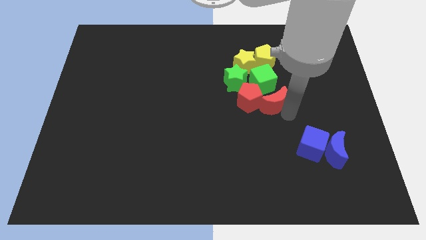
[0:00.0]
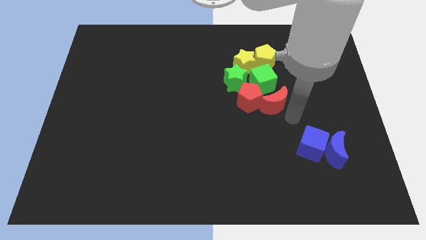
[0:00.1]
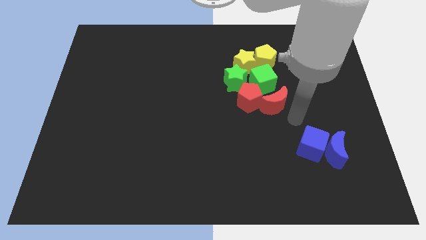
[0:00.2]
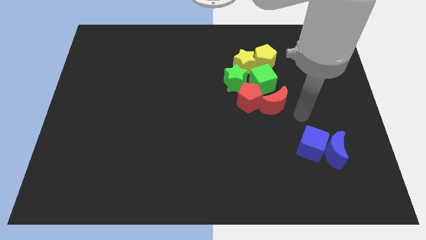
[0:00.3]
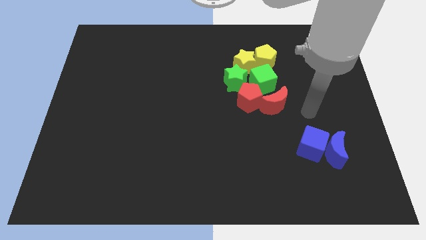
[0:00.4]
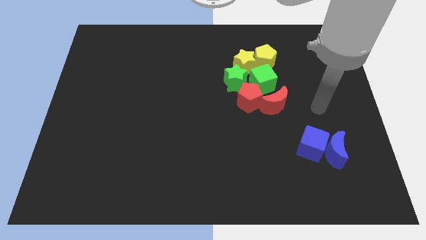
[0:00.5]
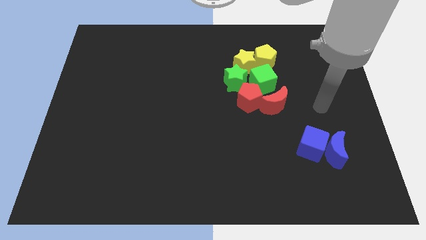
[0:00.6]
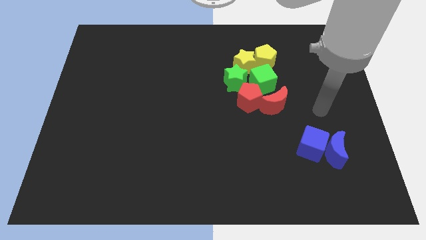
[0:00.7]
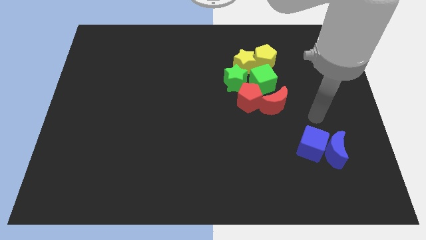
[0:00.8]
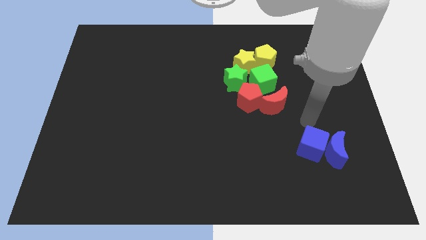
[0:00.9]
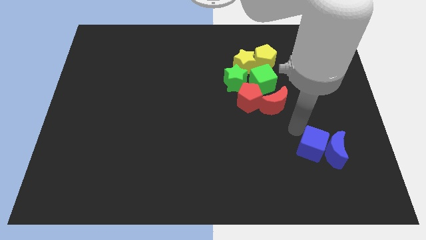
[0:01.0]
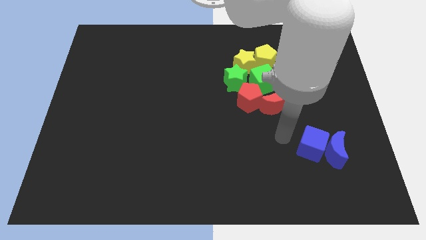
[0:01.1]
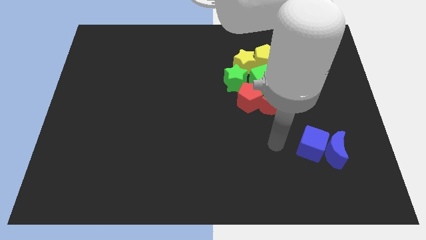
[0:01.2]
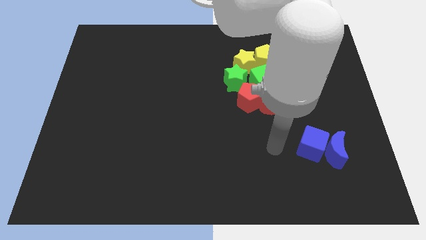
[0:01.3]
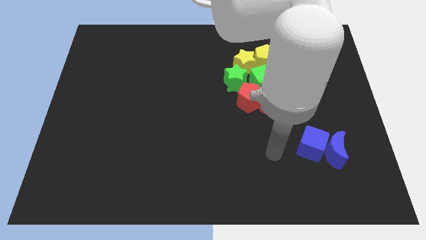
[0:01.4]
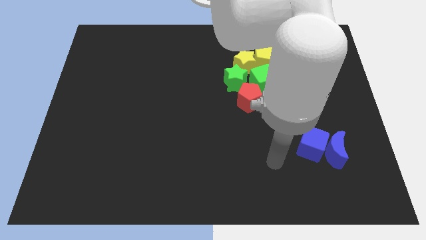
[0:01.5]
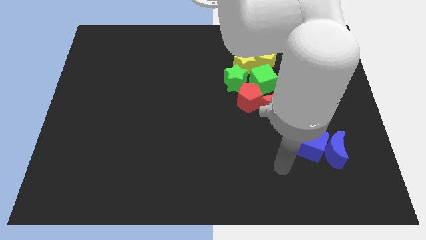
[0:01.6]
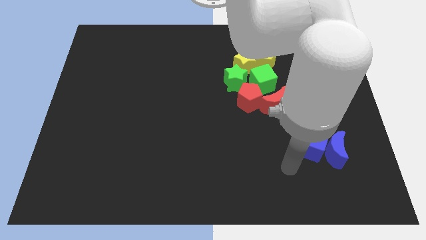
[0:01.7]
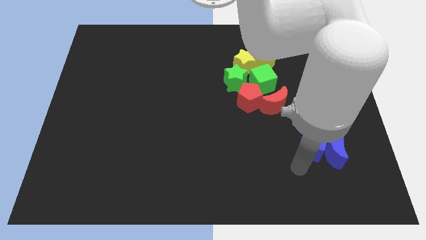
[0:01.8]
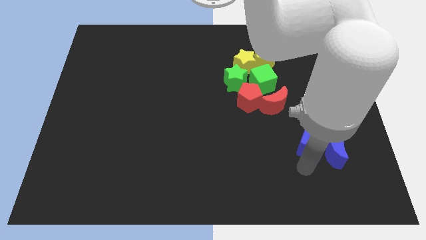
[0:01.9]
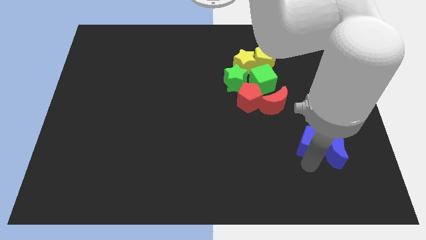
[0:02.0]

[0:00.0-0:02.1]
move your arm to the bottom right of the blue cube

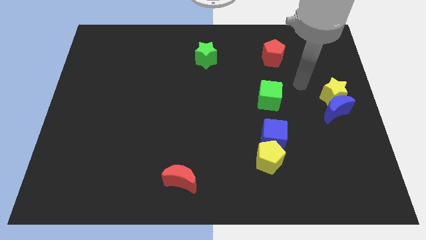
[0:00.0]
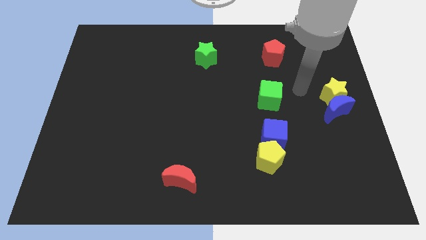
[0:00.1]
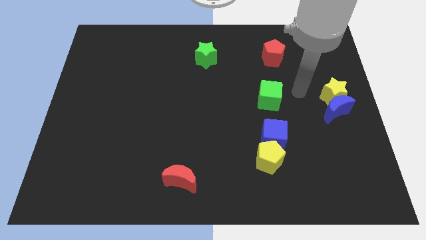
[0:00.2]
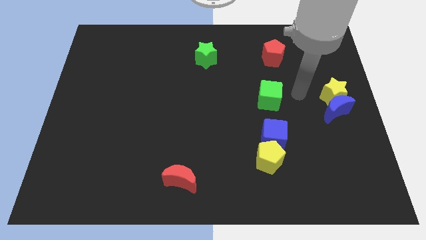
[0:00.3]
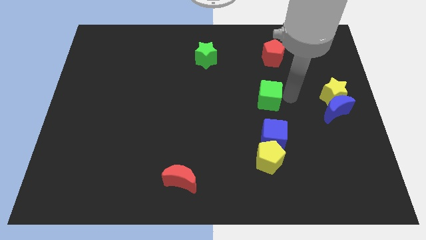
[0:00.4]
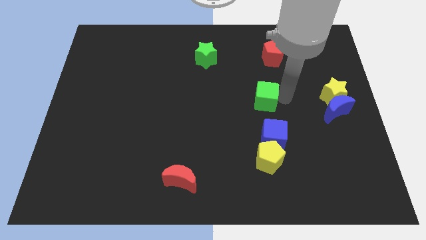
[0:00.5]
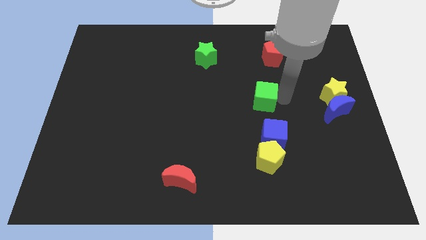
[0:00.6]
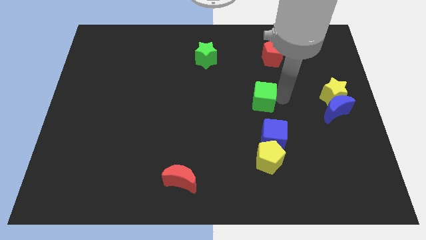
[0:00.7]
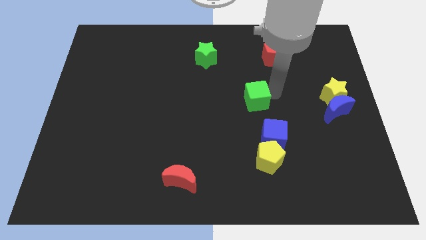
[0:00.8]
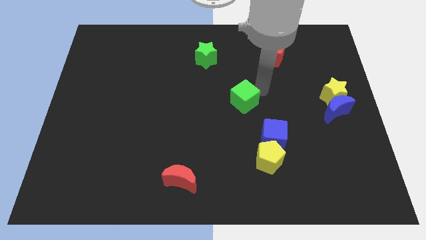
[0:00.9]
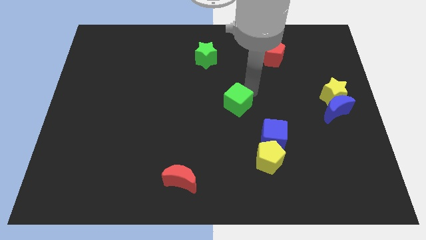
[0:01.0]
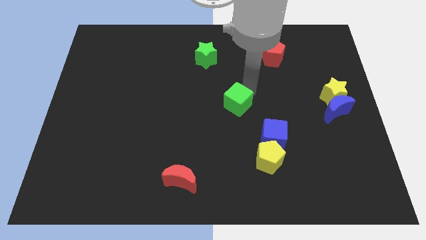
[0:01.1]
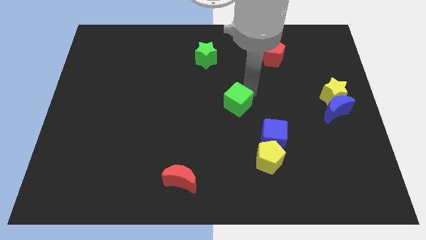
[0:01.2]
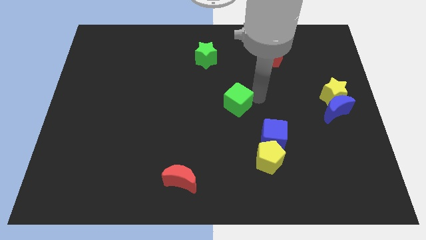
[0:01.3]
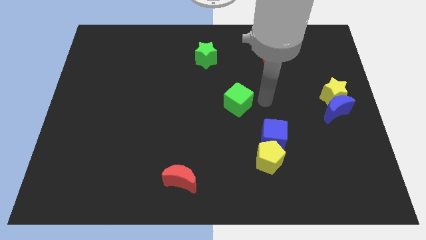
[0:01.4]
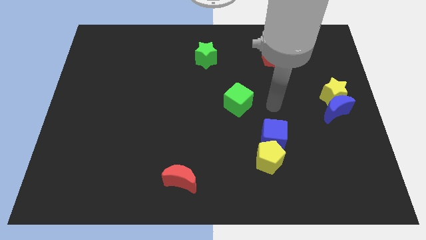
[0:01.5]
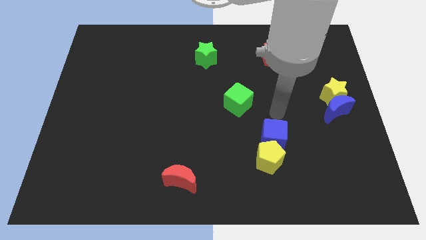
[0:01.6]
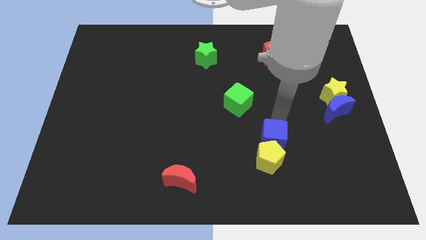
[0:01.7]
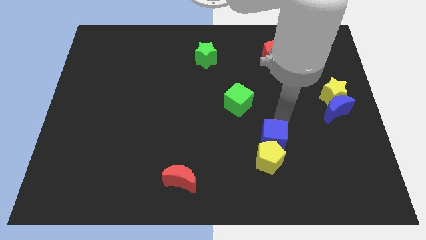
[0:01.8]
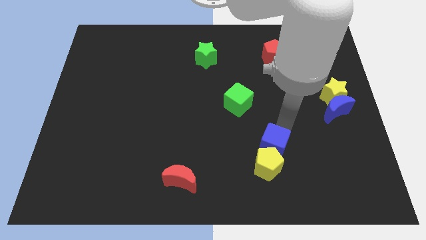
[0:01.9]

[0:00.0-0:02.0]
push the green cube towards the left

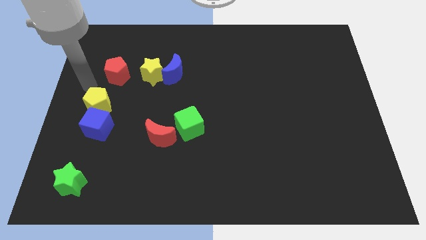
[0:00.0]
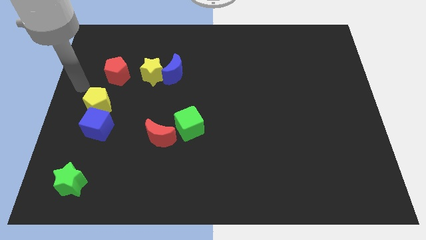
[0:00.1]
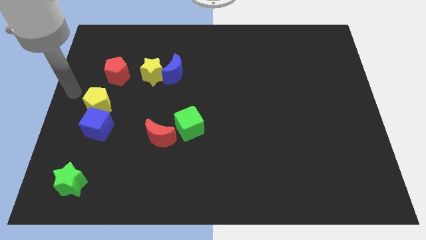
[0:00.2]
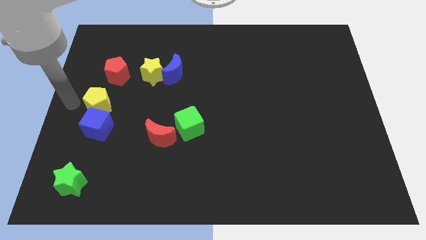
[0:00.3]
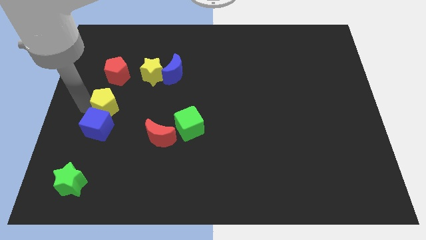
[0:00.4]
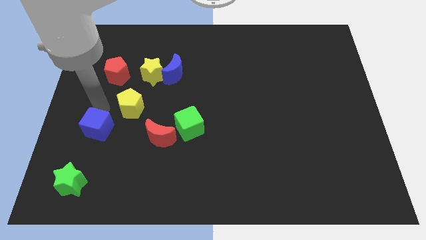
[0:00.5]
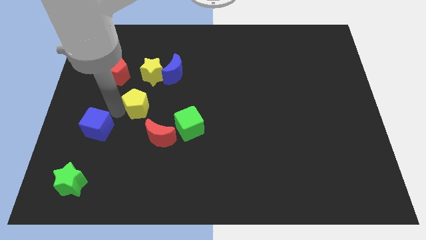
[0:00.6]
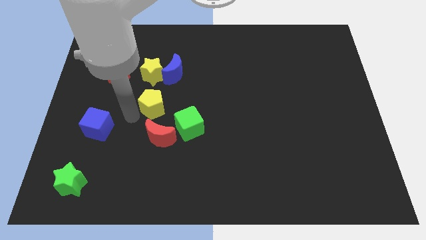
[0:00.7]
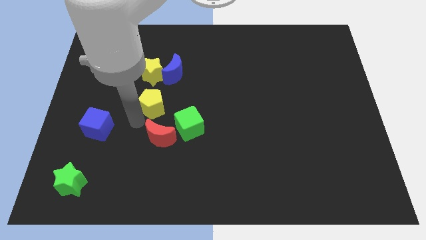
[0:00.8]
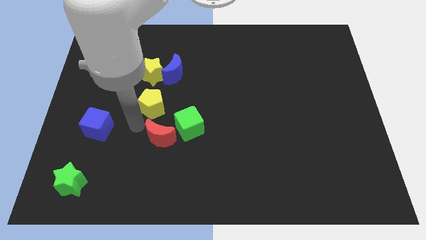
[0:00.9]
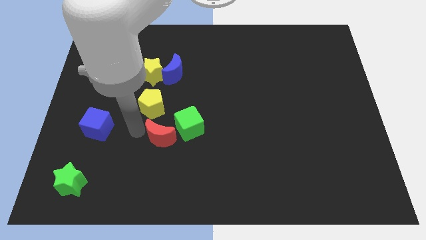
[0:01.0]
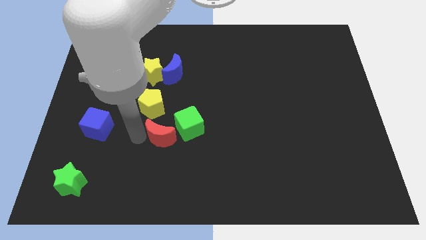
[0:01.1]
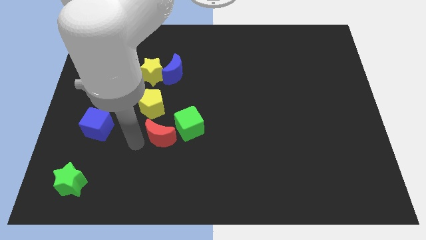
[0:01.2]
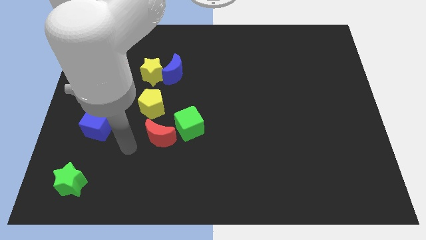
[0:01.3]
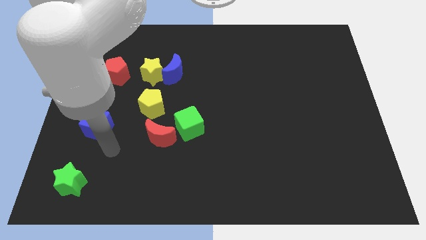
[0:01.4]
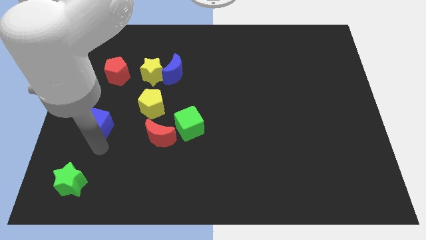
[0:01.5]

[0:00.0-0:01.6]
slide the yellow pentagon slightly to the right

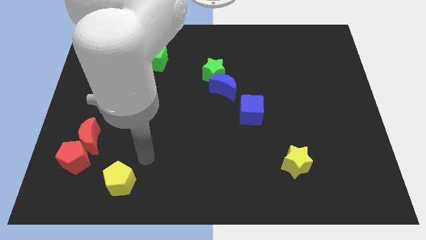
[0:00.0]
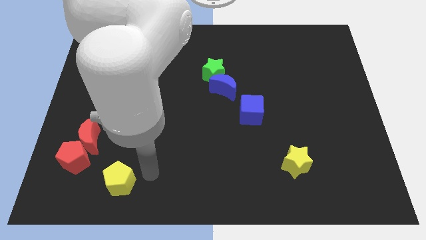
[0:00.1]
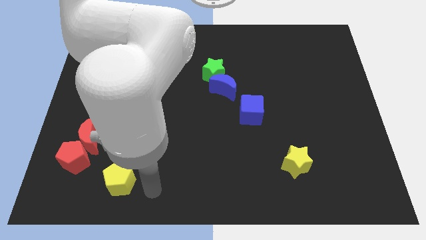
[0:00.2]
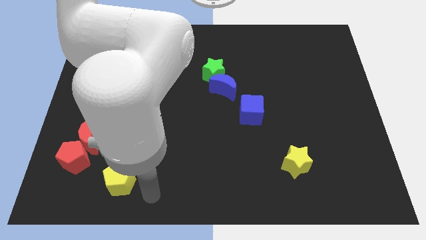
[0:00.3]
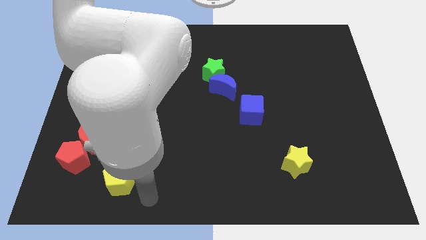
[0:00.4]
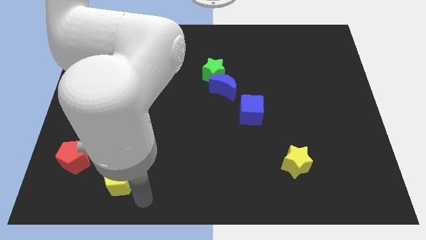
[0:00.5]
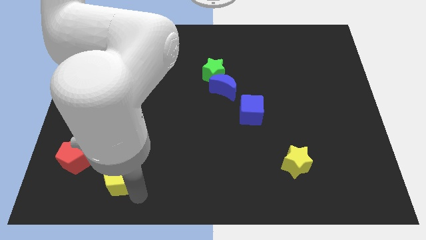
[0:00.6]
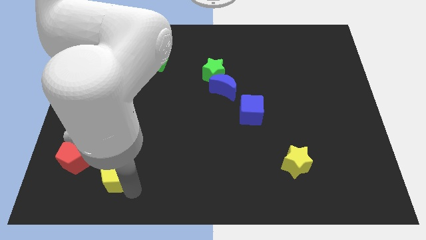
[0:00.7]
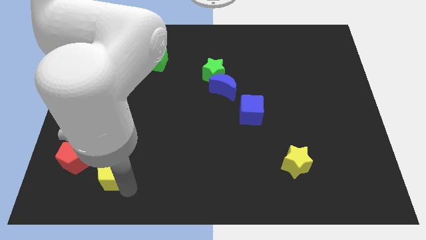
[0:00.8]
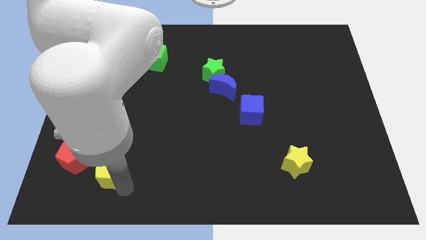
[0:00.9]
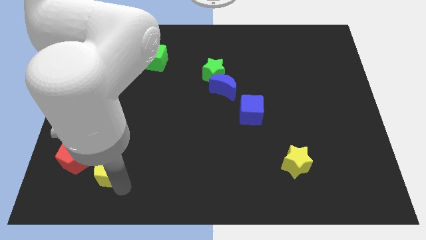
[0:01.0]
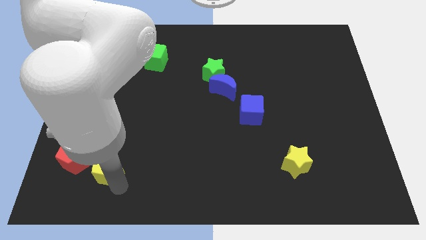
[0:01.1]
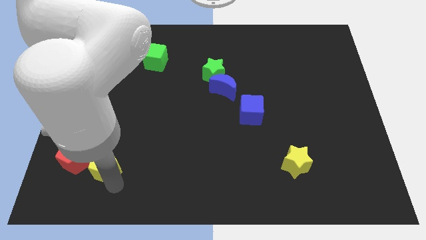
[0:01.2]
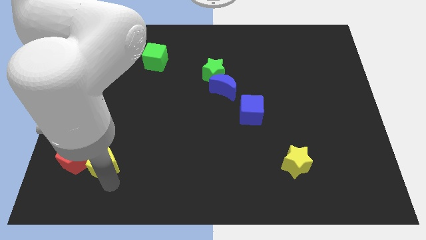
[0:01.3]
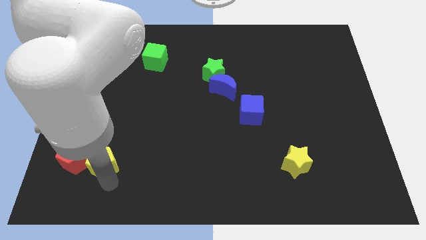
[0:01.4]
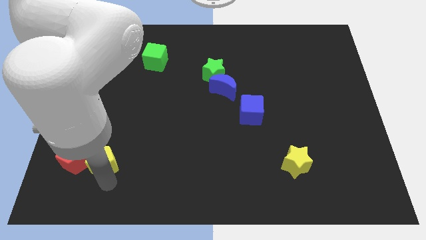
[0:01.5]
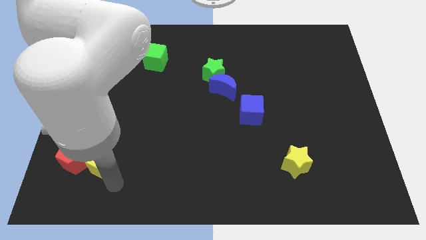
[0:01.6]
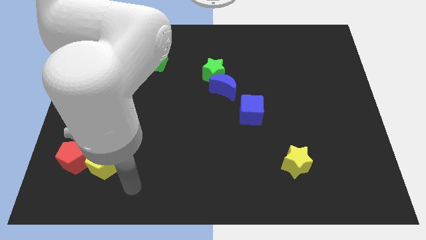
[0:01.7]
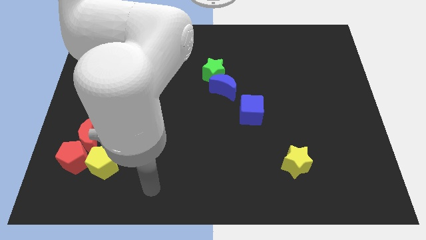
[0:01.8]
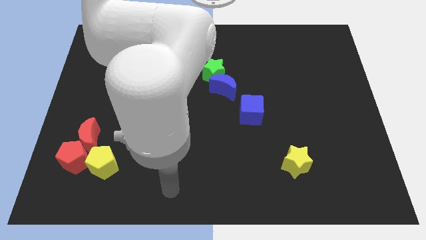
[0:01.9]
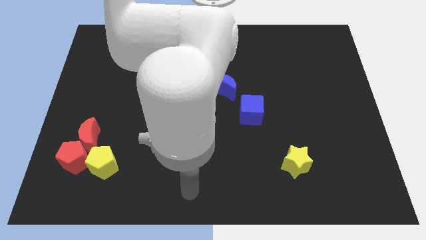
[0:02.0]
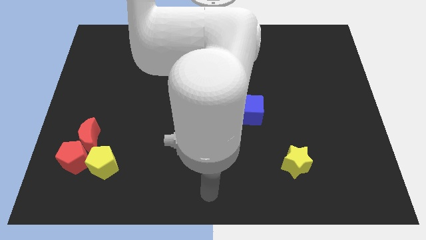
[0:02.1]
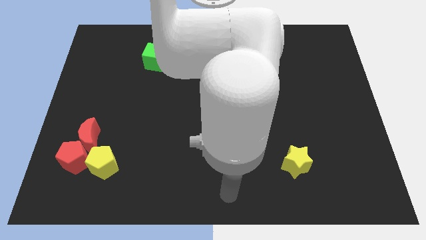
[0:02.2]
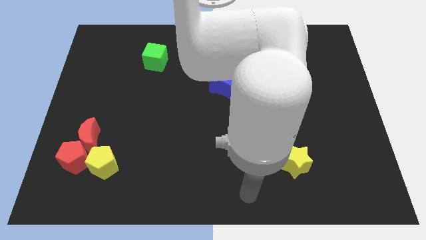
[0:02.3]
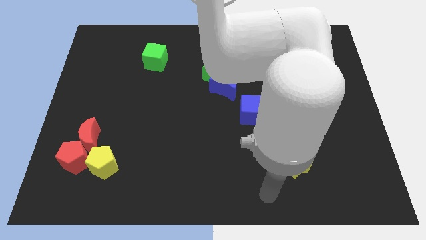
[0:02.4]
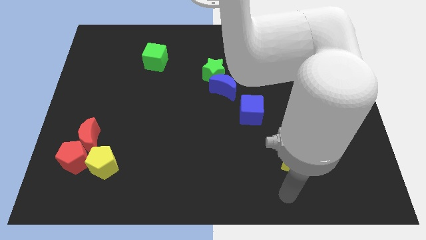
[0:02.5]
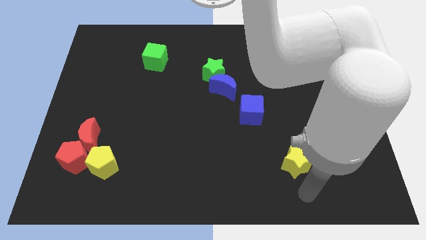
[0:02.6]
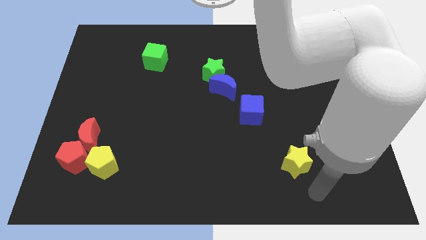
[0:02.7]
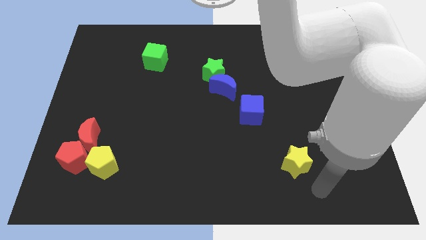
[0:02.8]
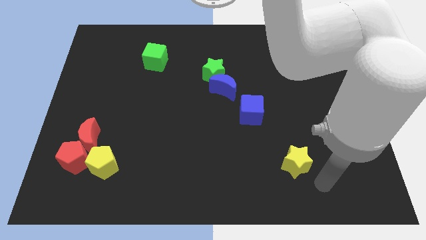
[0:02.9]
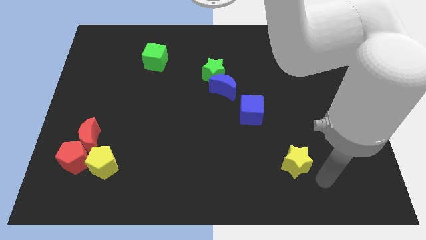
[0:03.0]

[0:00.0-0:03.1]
place yellow pentagon into red blocks
